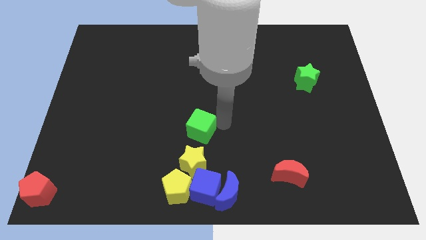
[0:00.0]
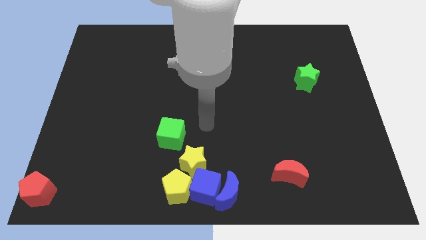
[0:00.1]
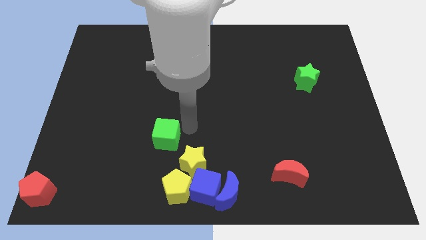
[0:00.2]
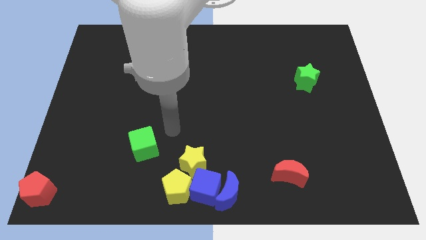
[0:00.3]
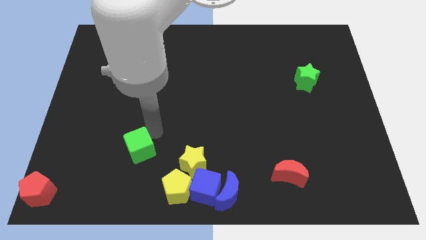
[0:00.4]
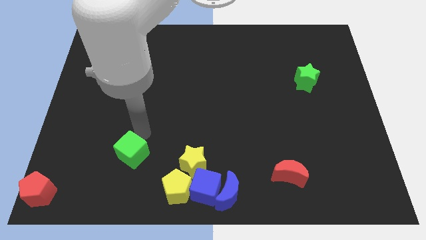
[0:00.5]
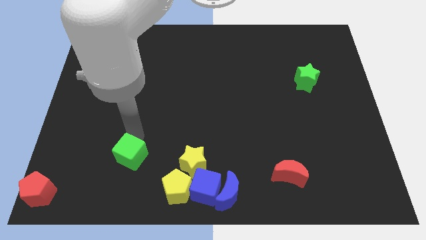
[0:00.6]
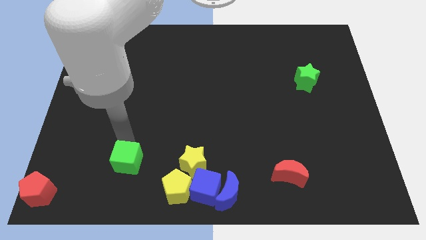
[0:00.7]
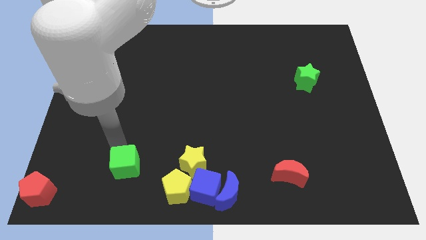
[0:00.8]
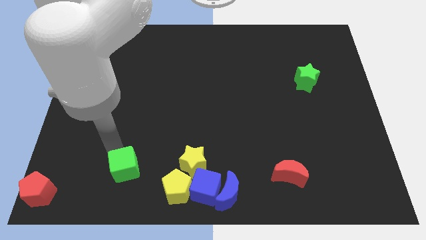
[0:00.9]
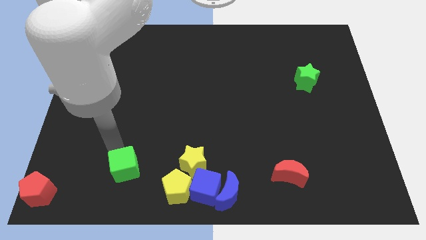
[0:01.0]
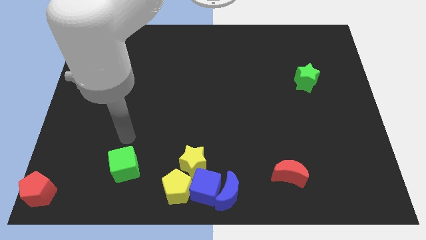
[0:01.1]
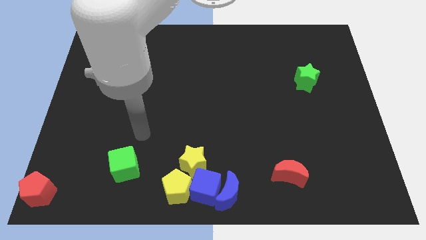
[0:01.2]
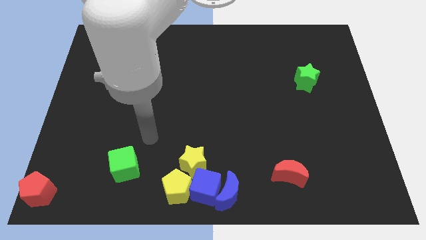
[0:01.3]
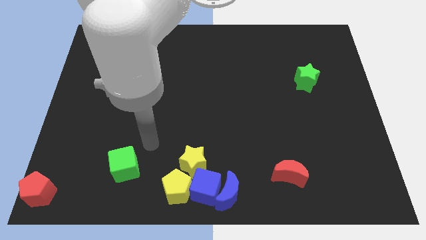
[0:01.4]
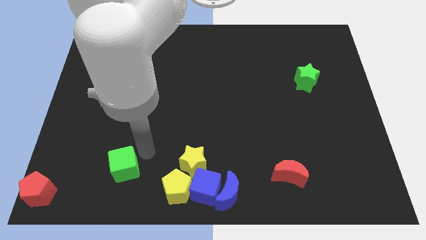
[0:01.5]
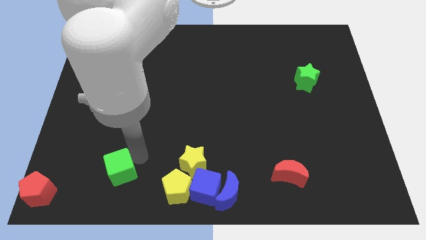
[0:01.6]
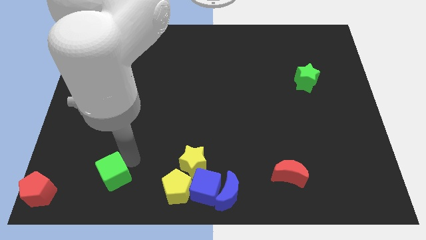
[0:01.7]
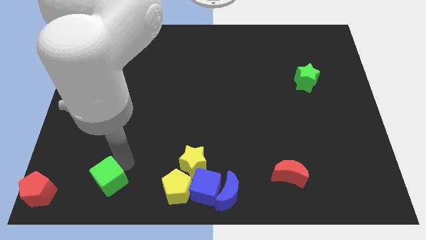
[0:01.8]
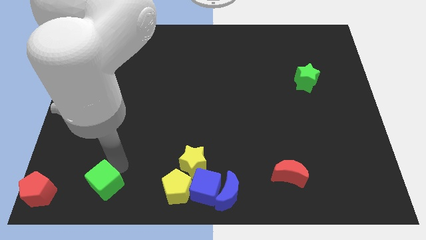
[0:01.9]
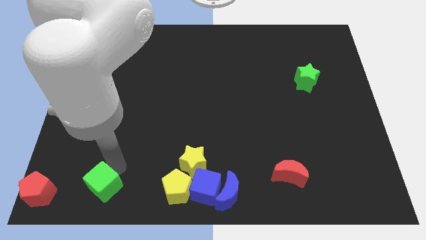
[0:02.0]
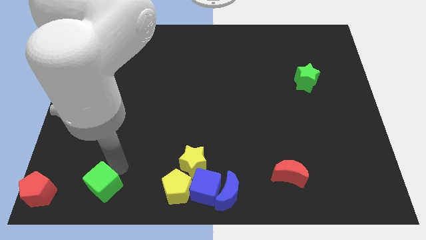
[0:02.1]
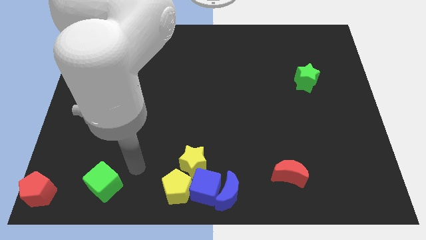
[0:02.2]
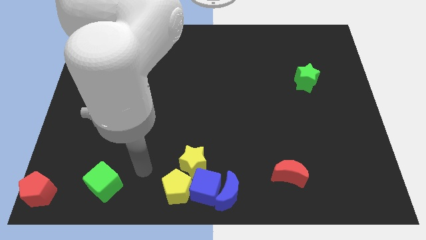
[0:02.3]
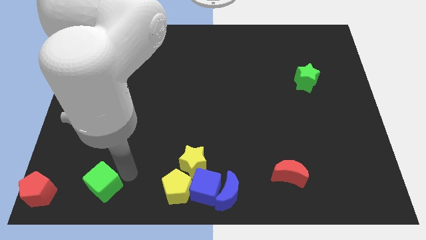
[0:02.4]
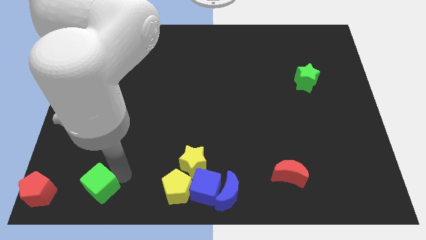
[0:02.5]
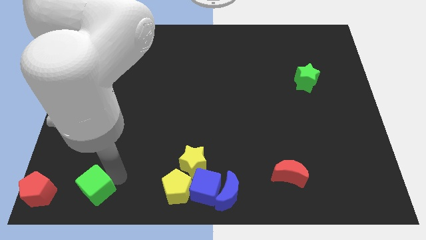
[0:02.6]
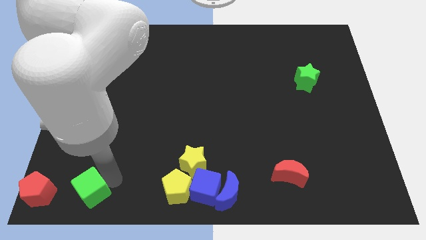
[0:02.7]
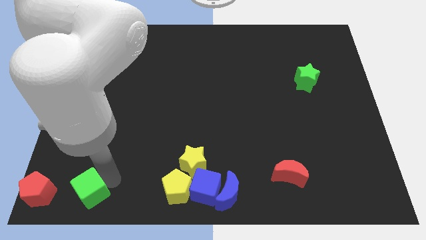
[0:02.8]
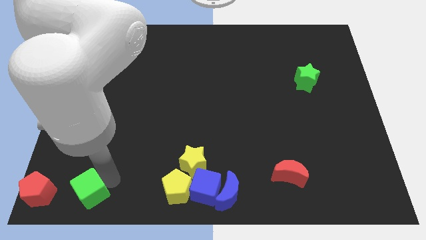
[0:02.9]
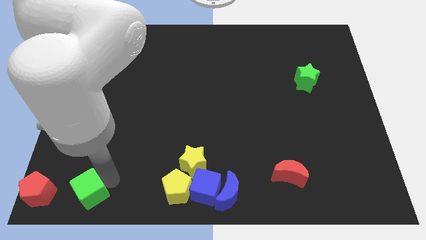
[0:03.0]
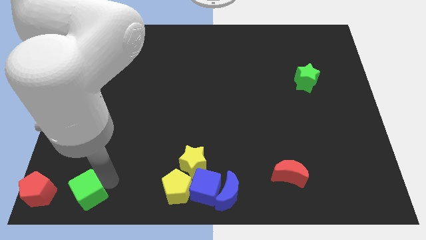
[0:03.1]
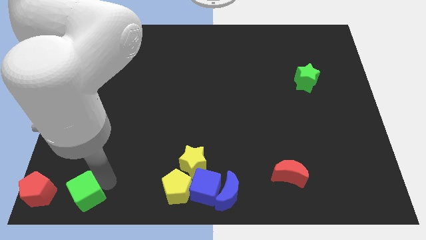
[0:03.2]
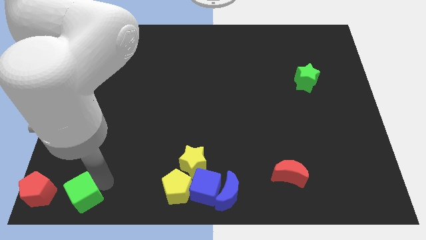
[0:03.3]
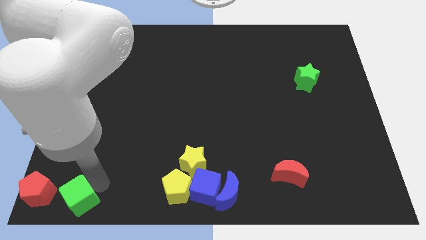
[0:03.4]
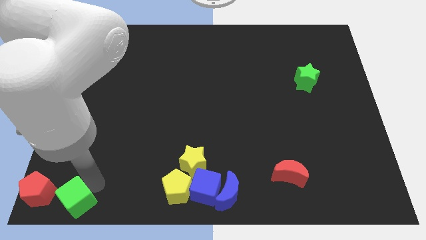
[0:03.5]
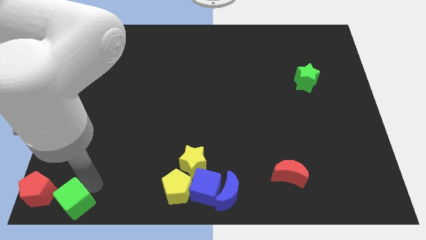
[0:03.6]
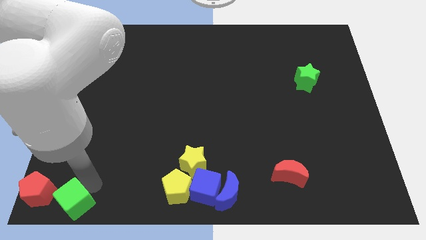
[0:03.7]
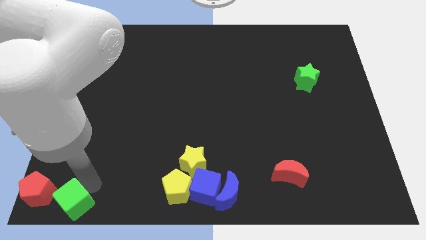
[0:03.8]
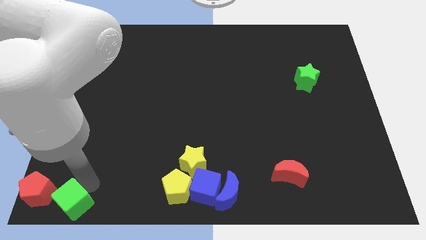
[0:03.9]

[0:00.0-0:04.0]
push the green cube towards the right side of the red pentagon

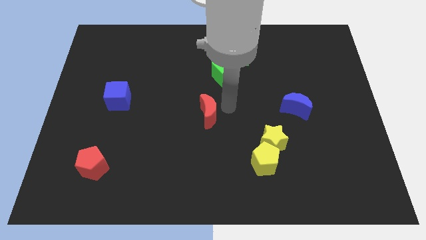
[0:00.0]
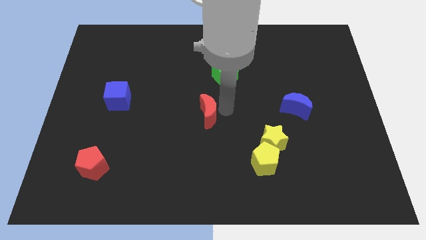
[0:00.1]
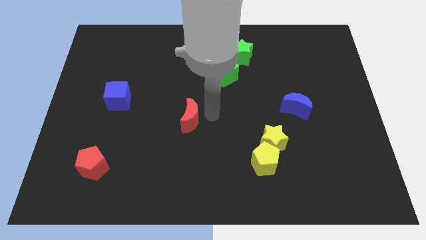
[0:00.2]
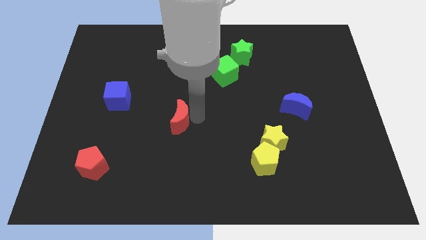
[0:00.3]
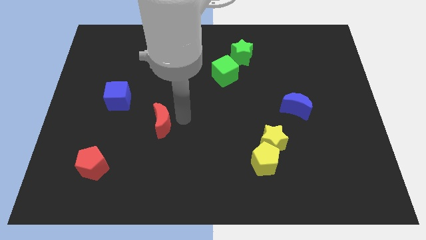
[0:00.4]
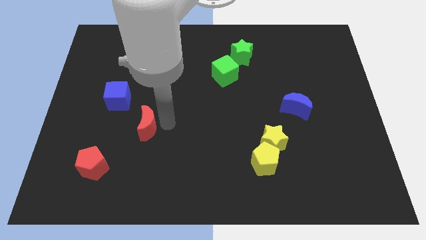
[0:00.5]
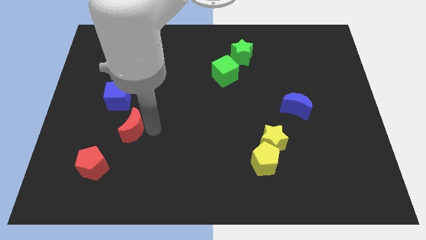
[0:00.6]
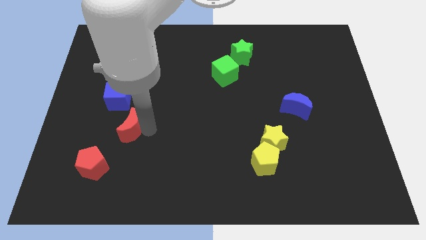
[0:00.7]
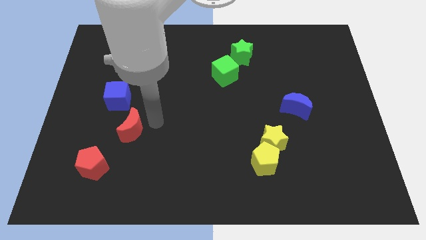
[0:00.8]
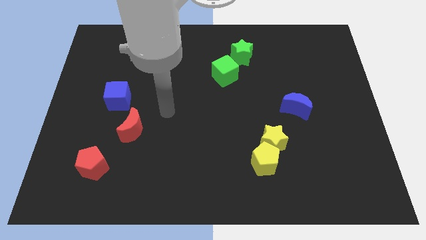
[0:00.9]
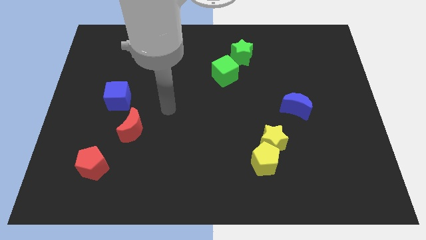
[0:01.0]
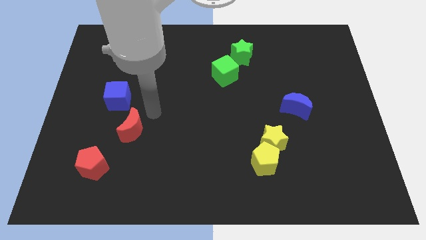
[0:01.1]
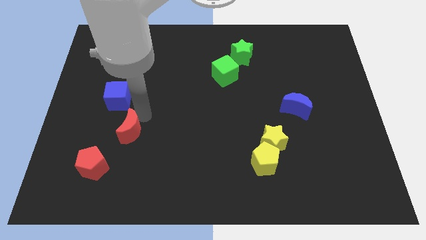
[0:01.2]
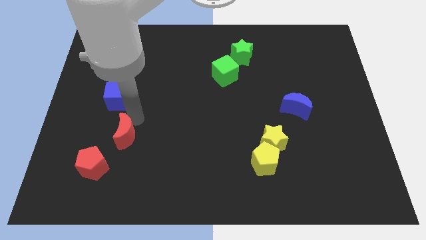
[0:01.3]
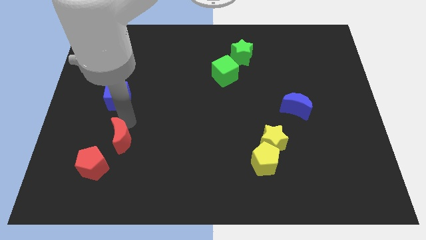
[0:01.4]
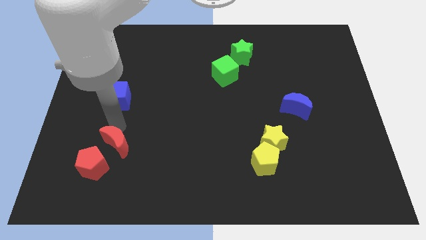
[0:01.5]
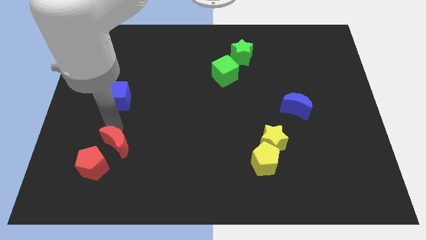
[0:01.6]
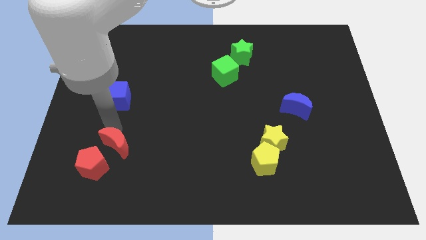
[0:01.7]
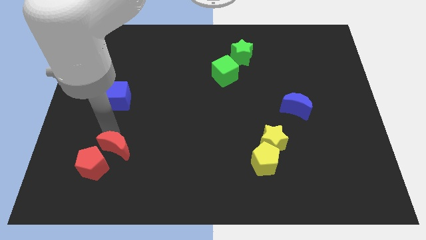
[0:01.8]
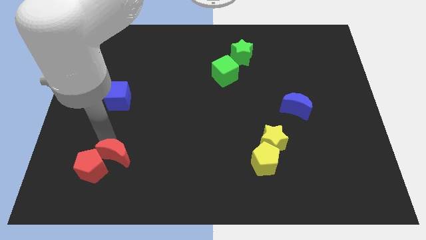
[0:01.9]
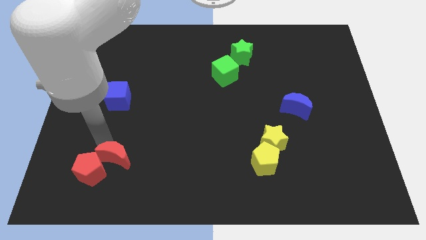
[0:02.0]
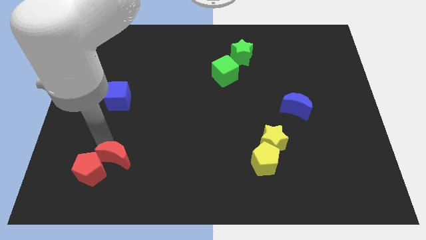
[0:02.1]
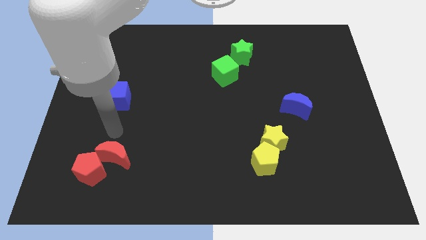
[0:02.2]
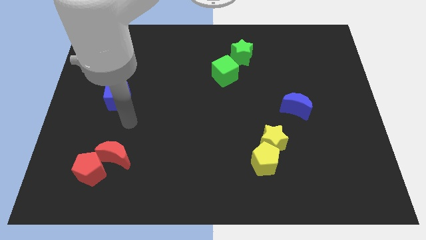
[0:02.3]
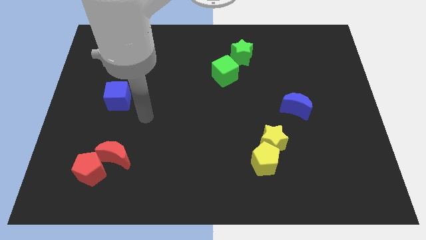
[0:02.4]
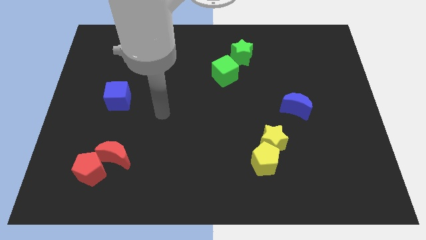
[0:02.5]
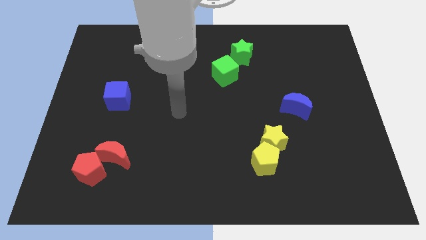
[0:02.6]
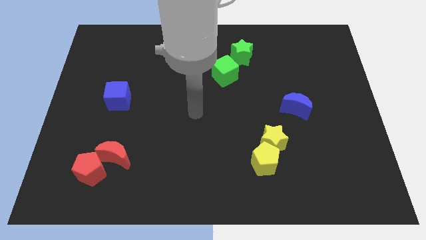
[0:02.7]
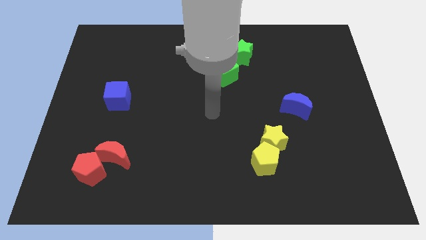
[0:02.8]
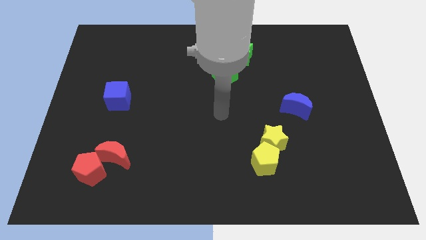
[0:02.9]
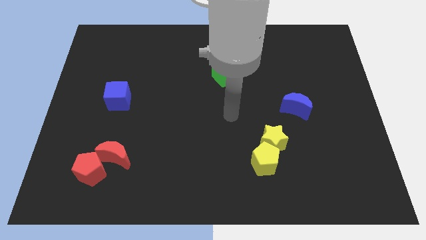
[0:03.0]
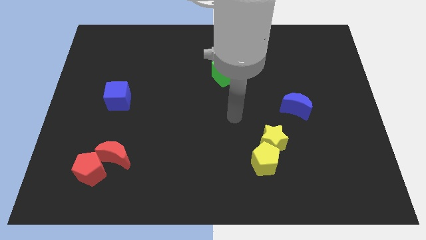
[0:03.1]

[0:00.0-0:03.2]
push red moon in to red pentagon

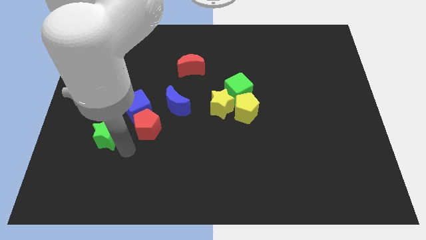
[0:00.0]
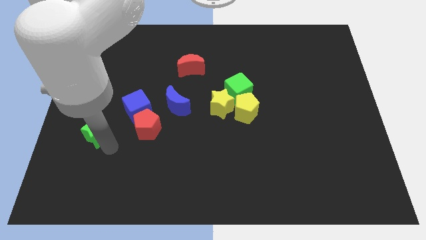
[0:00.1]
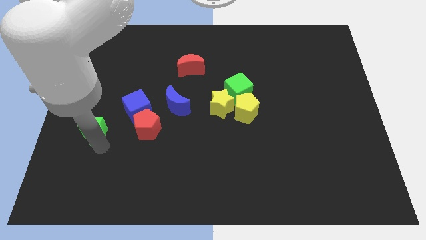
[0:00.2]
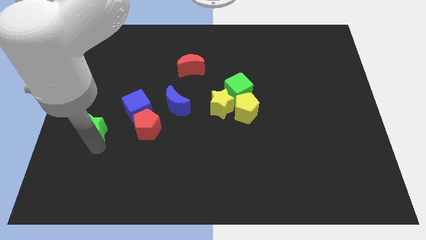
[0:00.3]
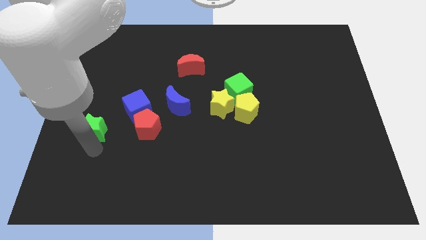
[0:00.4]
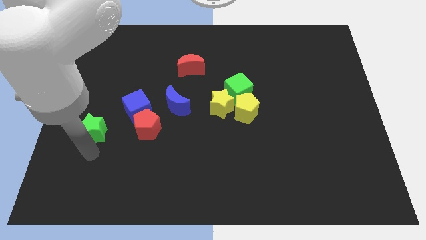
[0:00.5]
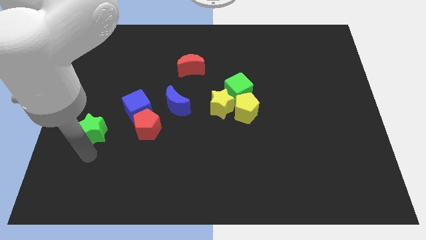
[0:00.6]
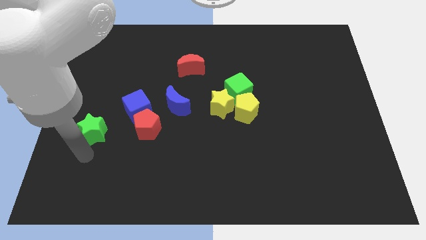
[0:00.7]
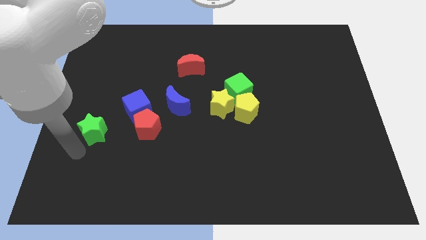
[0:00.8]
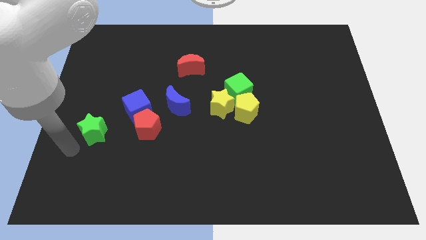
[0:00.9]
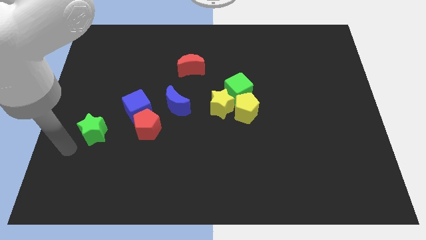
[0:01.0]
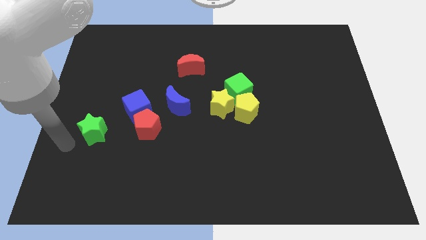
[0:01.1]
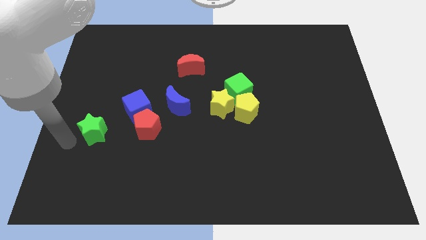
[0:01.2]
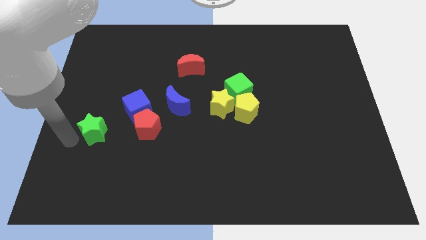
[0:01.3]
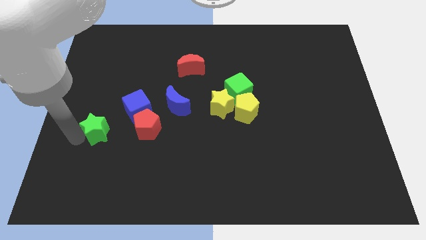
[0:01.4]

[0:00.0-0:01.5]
place the arm to the left of the green star

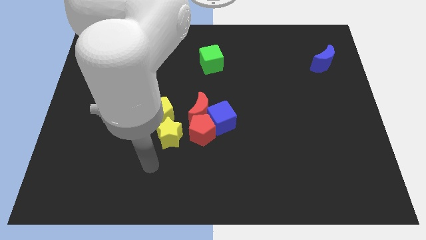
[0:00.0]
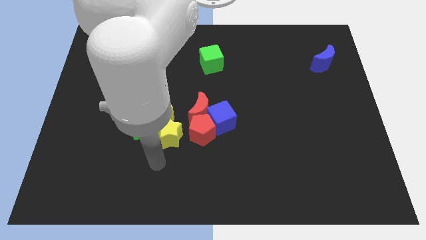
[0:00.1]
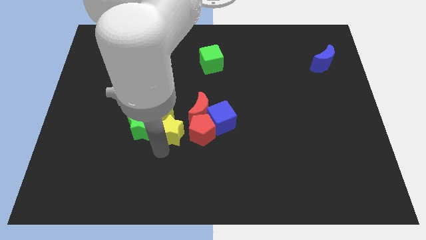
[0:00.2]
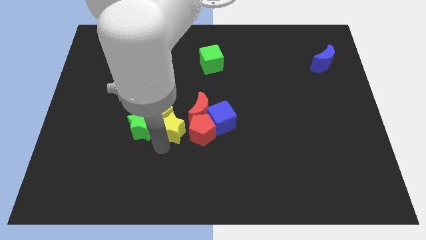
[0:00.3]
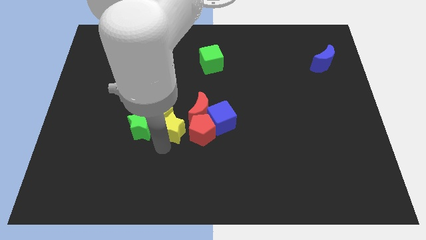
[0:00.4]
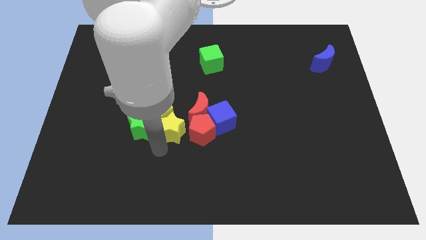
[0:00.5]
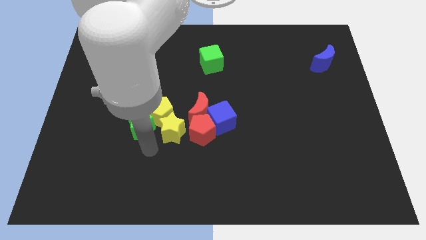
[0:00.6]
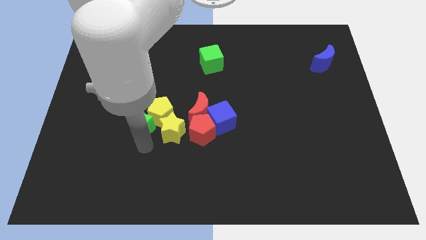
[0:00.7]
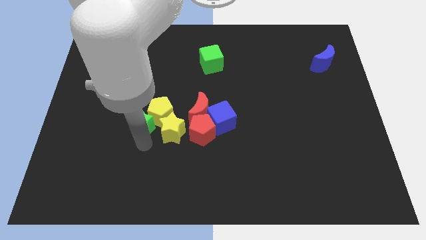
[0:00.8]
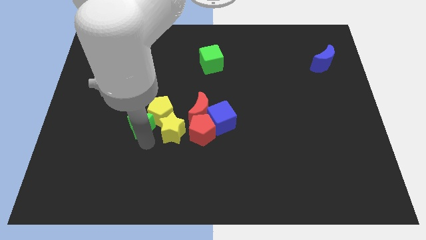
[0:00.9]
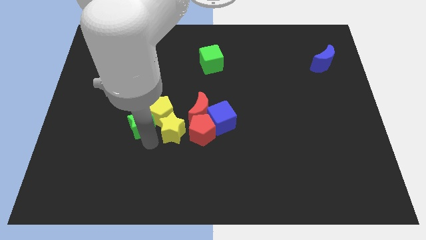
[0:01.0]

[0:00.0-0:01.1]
move yellow star into yellow pentagon
